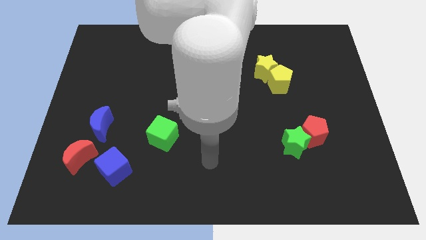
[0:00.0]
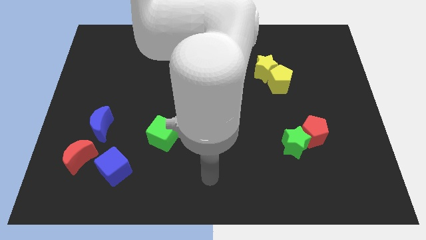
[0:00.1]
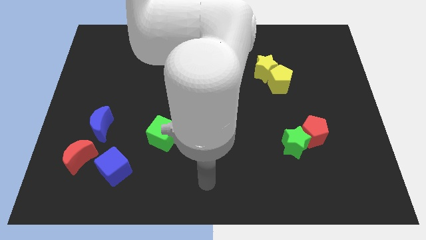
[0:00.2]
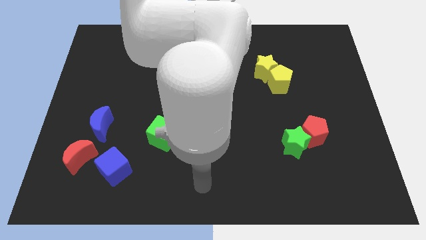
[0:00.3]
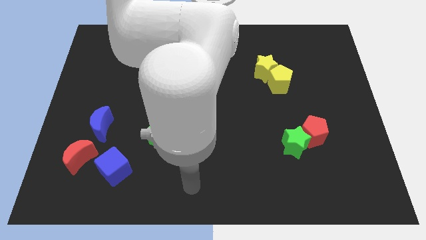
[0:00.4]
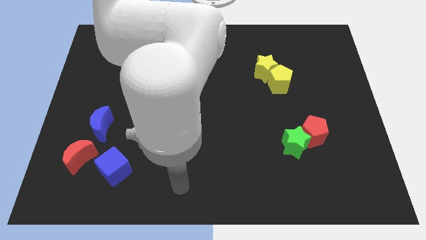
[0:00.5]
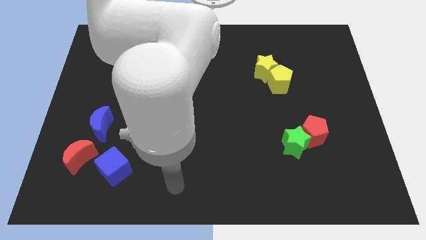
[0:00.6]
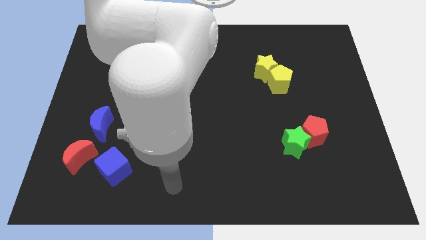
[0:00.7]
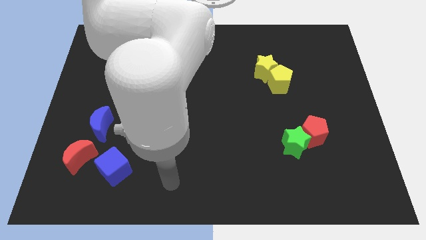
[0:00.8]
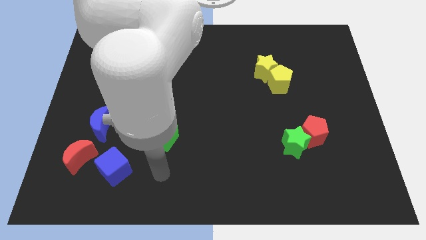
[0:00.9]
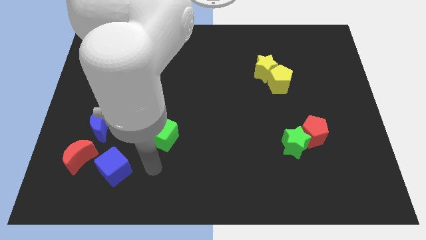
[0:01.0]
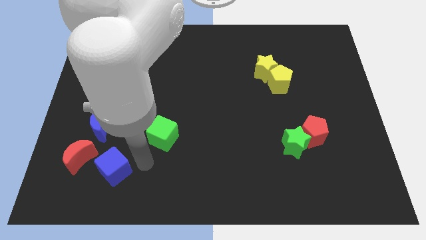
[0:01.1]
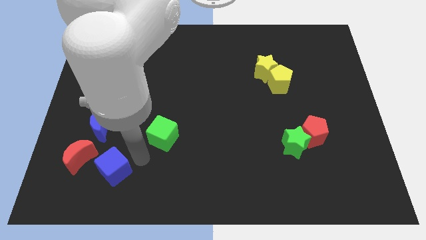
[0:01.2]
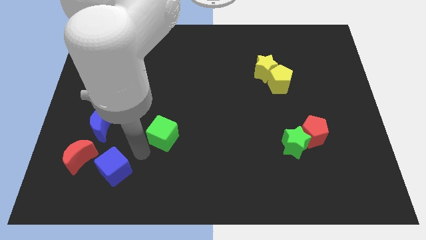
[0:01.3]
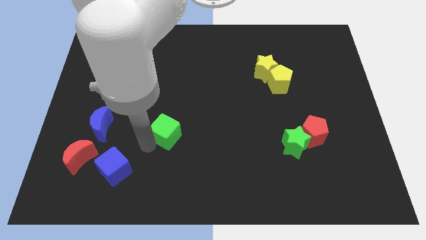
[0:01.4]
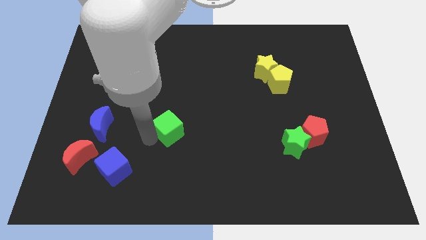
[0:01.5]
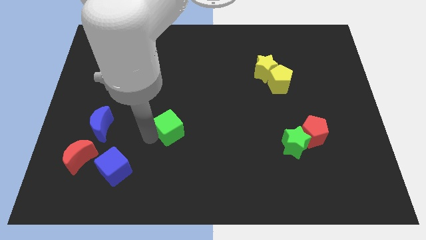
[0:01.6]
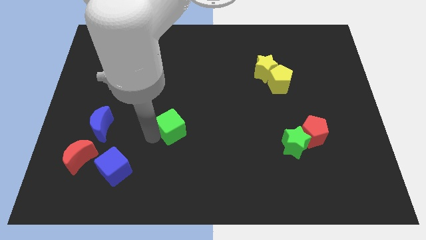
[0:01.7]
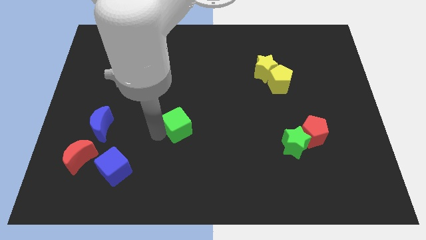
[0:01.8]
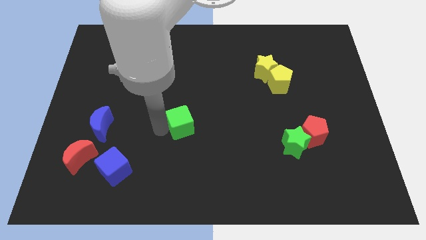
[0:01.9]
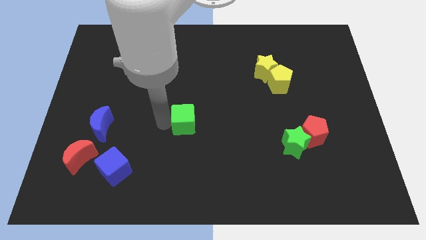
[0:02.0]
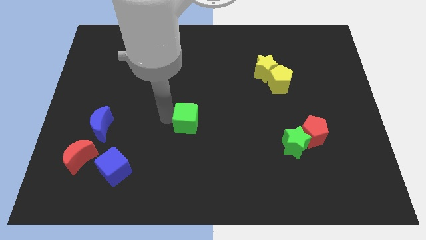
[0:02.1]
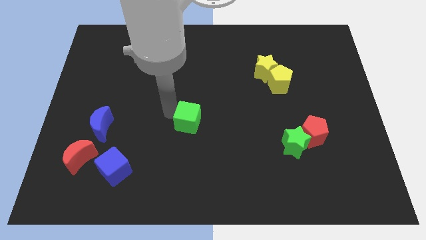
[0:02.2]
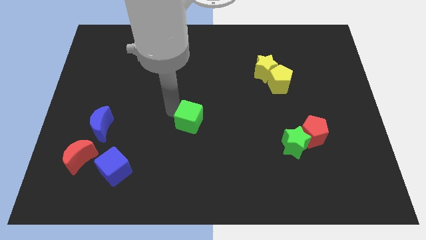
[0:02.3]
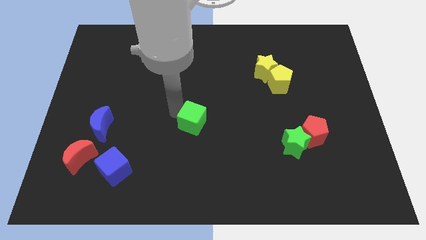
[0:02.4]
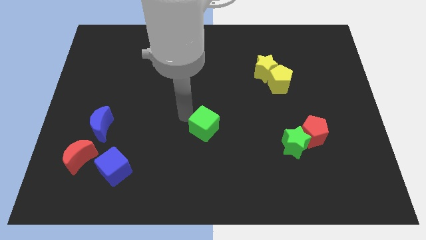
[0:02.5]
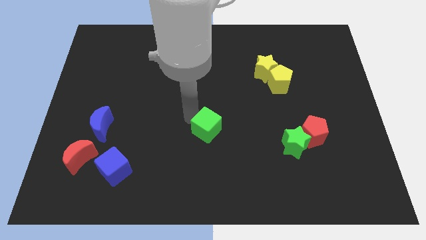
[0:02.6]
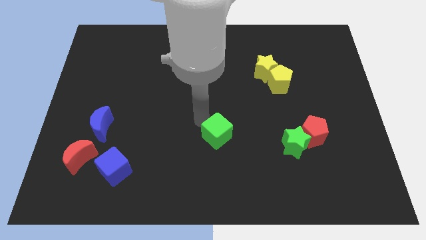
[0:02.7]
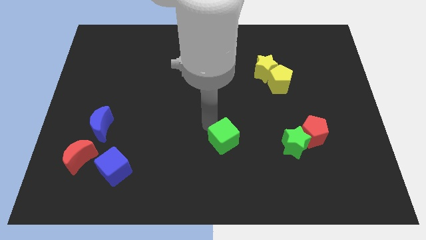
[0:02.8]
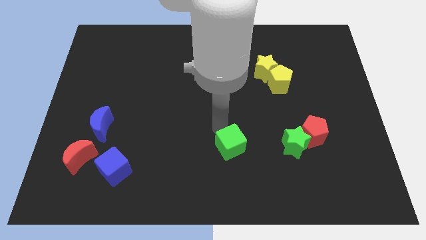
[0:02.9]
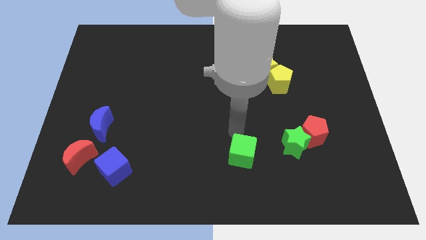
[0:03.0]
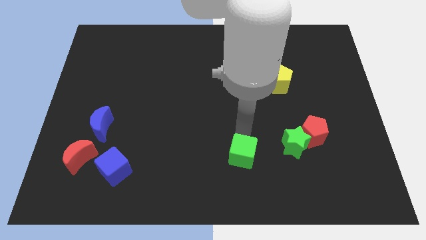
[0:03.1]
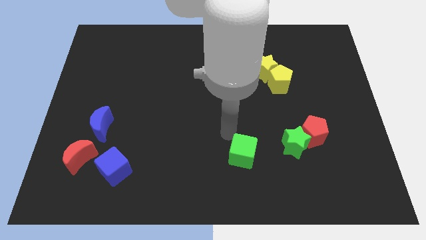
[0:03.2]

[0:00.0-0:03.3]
push the green cube to the center

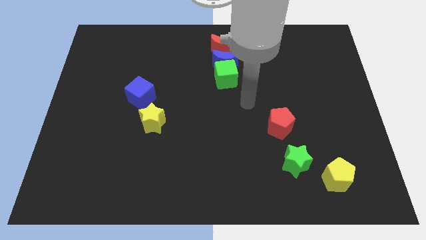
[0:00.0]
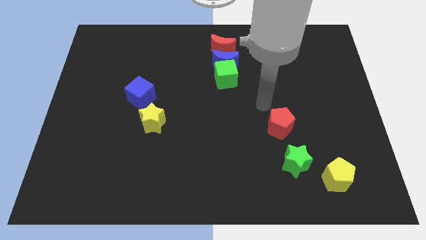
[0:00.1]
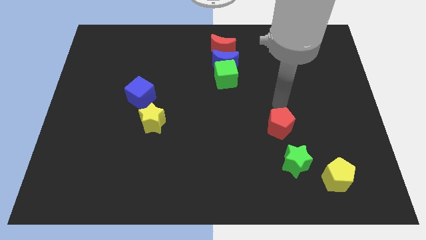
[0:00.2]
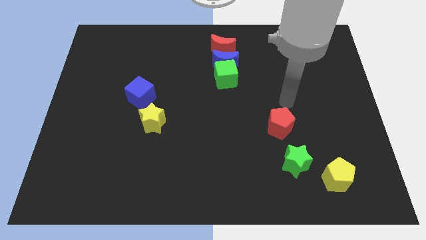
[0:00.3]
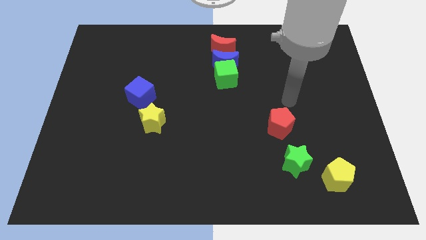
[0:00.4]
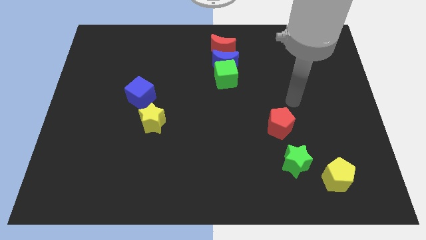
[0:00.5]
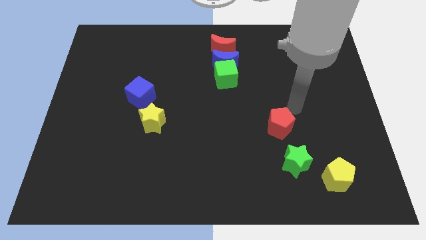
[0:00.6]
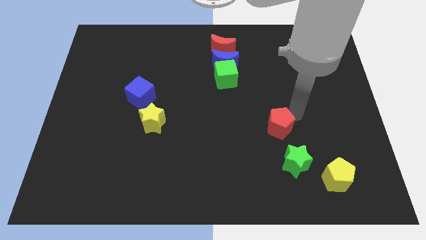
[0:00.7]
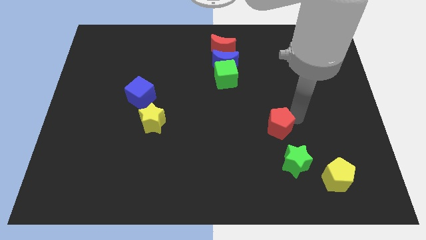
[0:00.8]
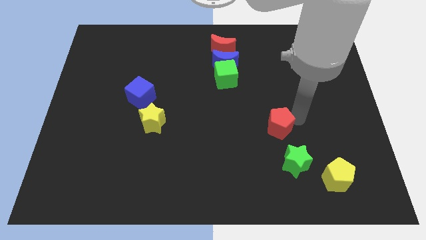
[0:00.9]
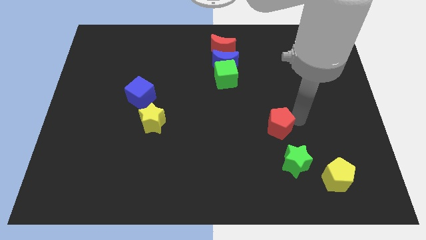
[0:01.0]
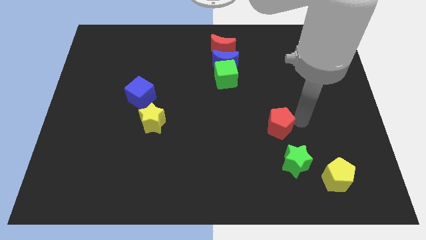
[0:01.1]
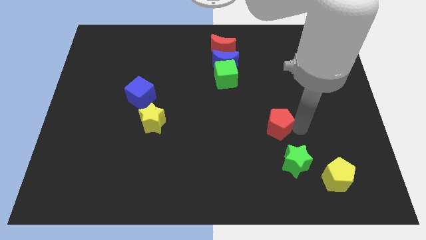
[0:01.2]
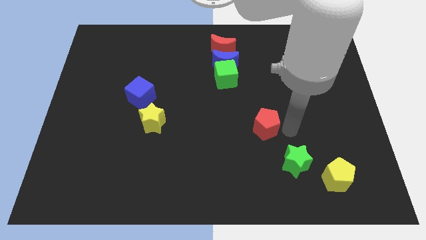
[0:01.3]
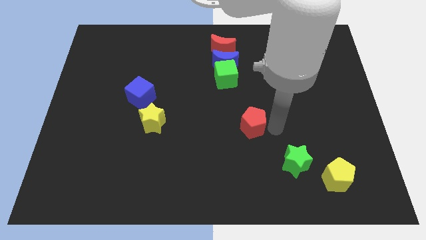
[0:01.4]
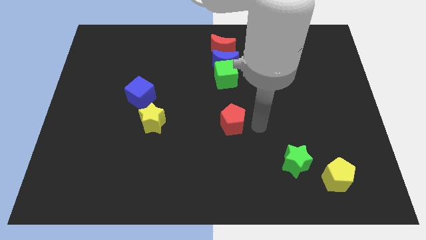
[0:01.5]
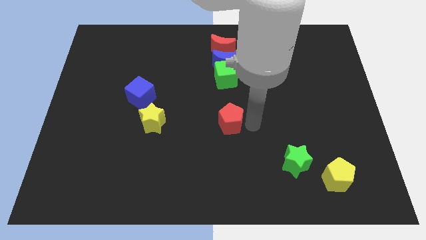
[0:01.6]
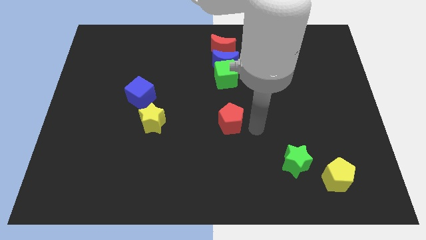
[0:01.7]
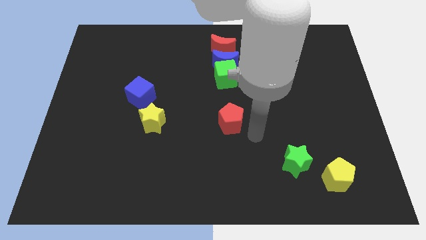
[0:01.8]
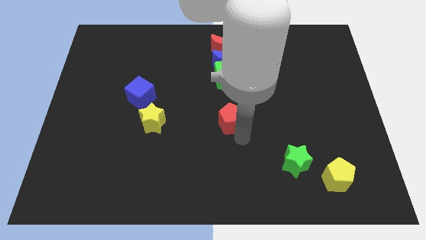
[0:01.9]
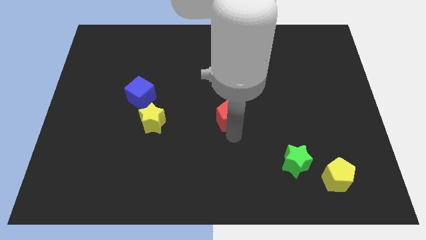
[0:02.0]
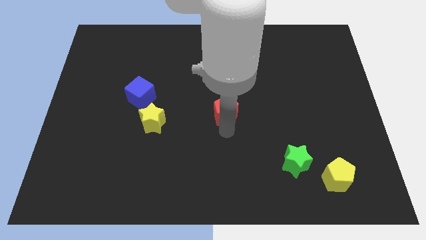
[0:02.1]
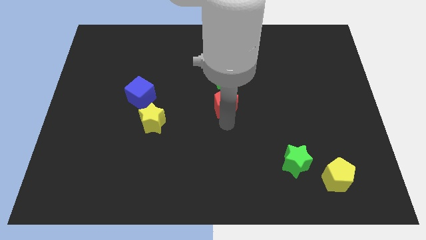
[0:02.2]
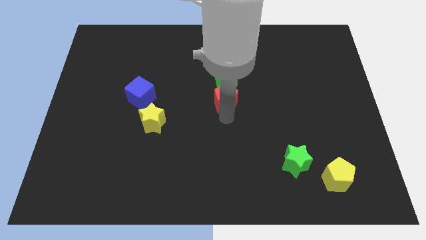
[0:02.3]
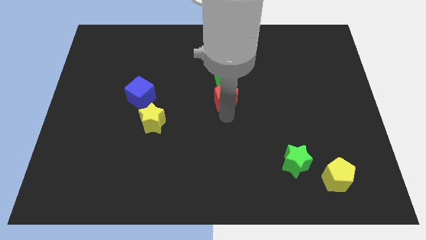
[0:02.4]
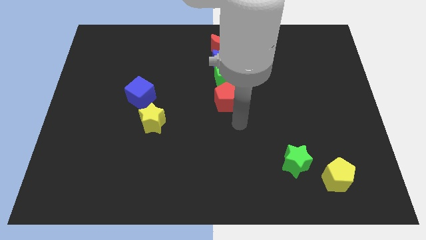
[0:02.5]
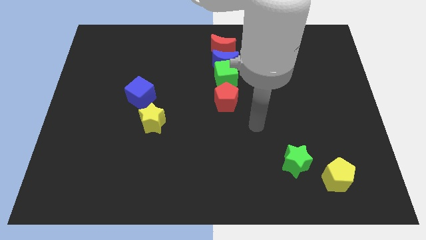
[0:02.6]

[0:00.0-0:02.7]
place the red pentagon below the green cube

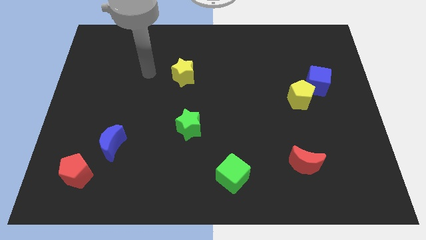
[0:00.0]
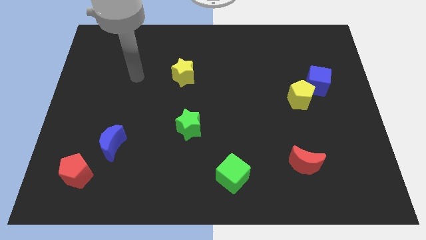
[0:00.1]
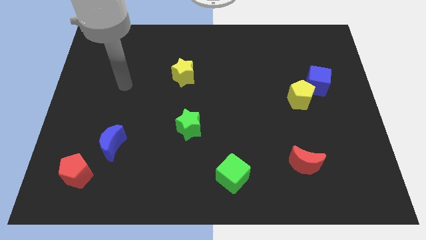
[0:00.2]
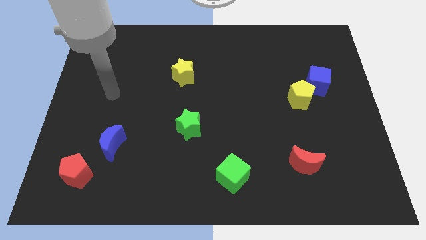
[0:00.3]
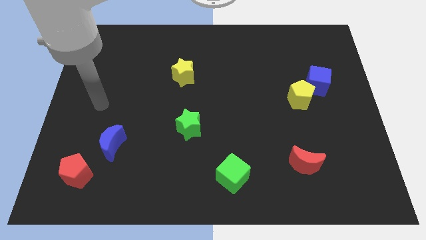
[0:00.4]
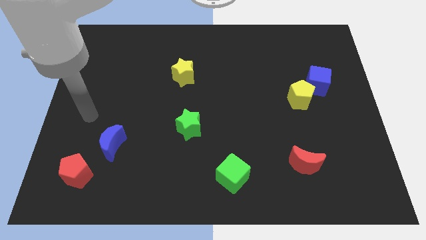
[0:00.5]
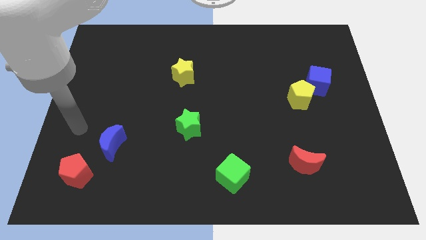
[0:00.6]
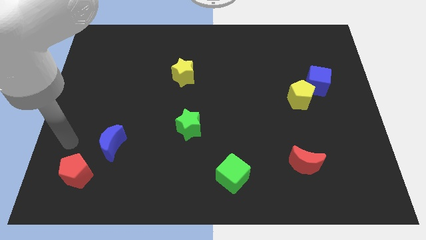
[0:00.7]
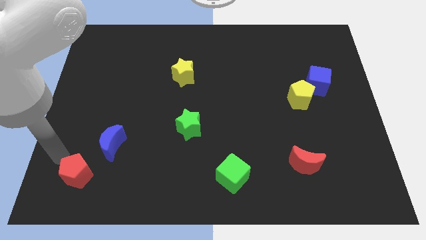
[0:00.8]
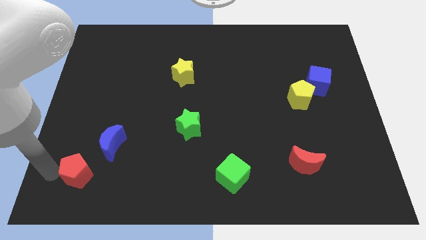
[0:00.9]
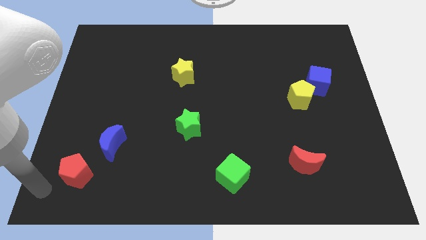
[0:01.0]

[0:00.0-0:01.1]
slide your arm towards bottom left

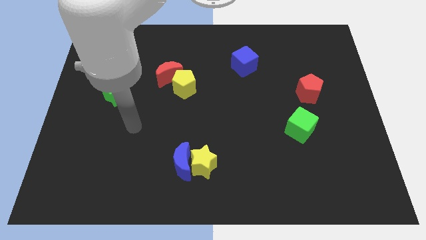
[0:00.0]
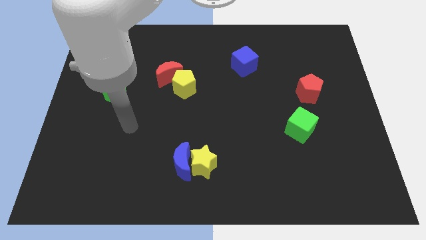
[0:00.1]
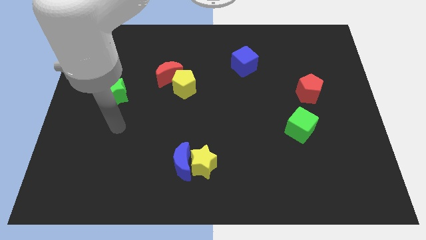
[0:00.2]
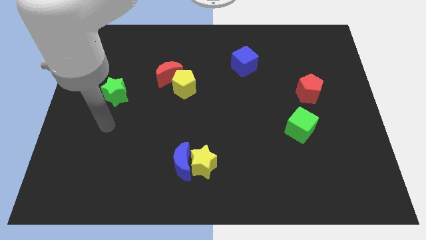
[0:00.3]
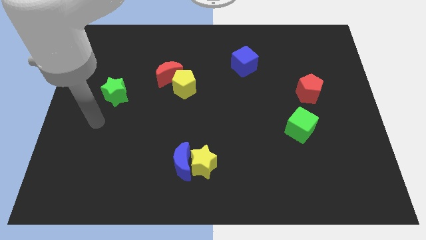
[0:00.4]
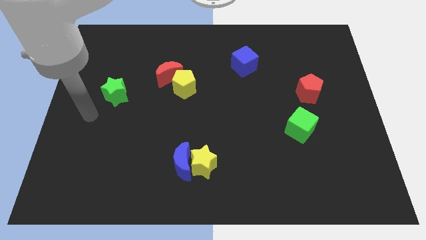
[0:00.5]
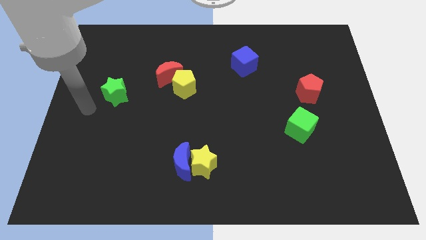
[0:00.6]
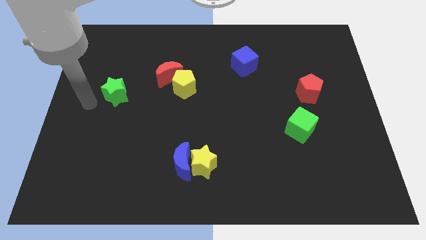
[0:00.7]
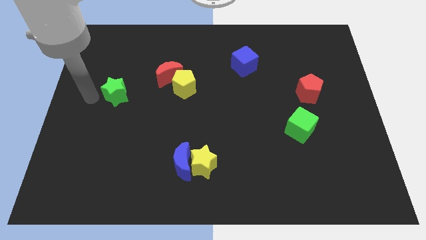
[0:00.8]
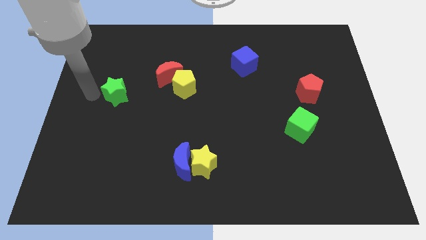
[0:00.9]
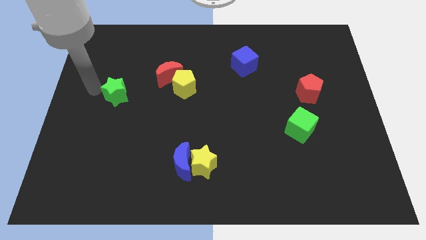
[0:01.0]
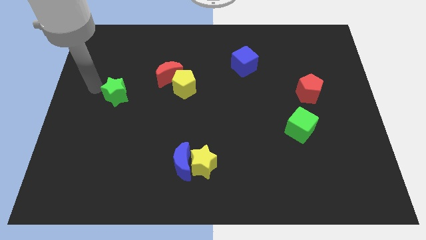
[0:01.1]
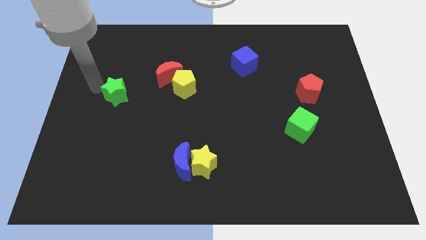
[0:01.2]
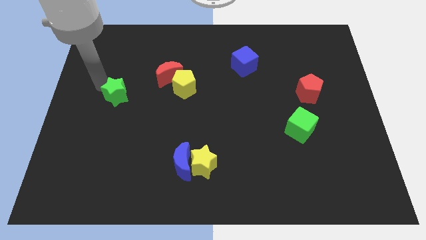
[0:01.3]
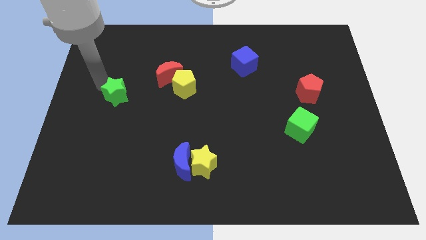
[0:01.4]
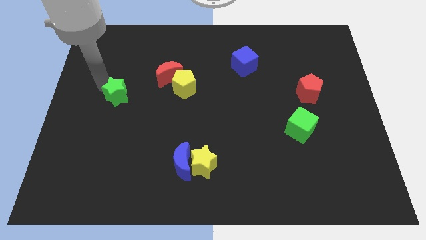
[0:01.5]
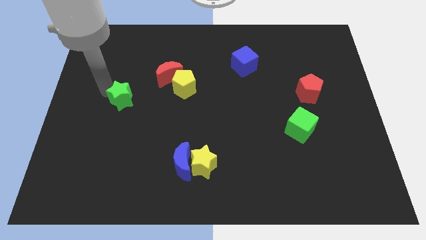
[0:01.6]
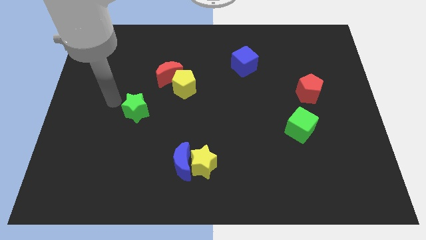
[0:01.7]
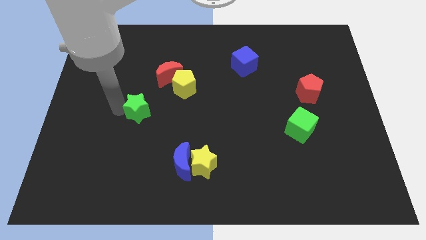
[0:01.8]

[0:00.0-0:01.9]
push the green star to the bottom right of the board
